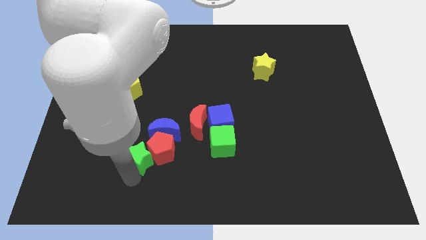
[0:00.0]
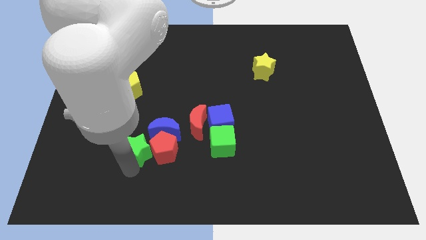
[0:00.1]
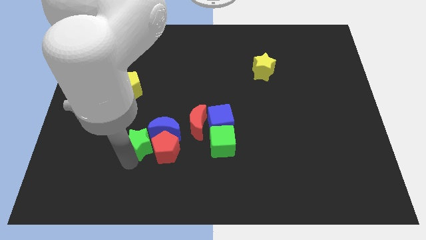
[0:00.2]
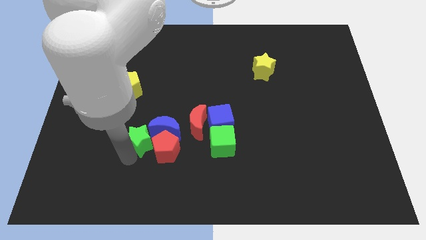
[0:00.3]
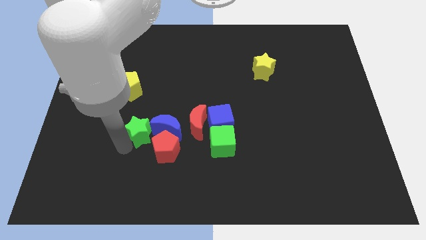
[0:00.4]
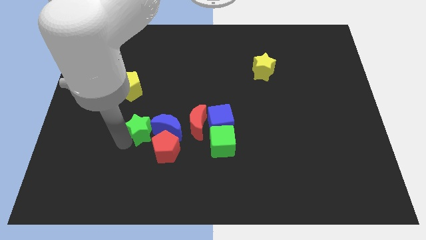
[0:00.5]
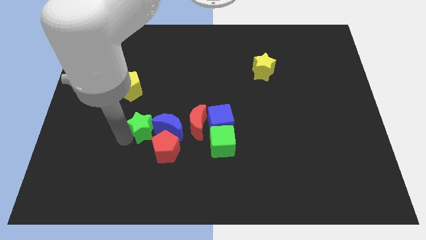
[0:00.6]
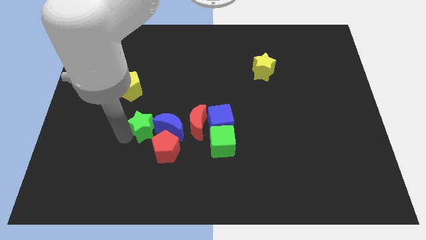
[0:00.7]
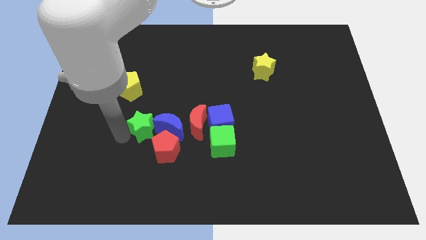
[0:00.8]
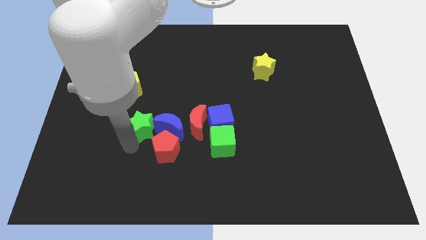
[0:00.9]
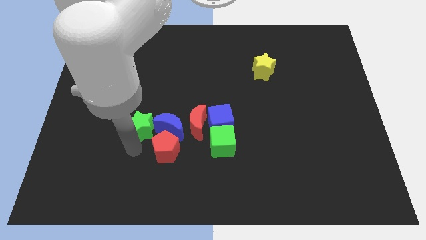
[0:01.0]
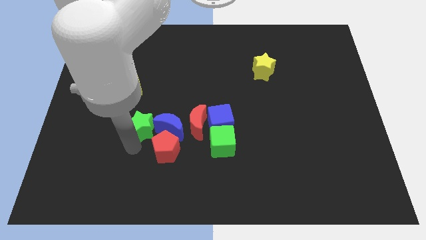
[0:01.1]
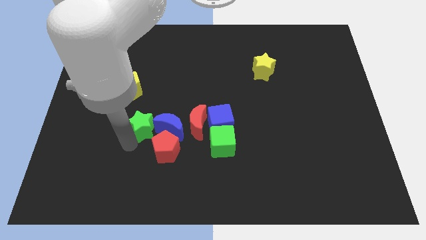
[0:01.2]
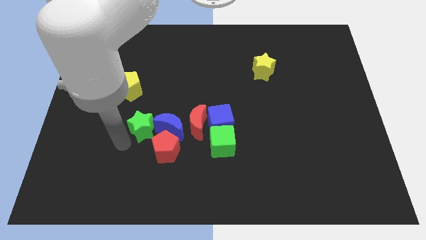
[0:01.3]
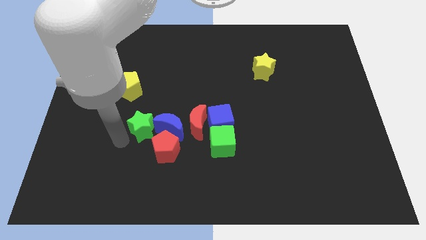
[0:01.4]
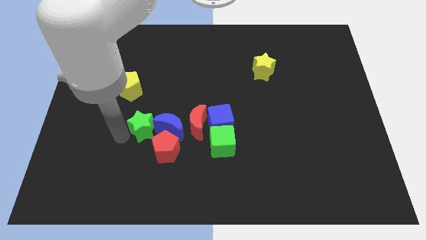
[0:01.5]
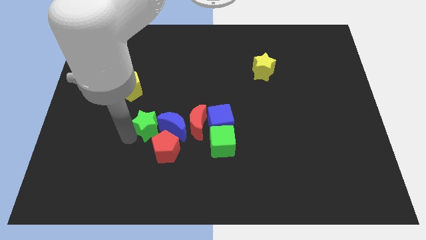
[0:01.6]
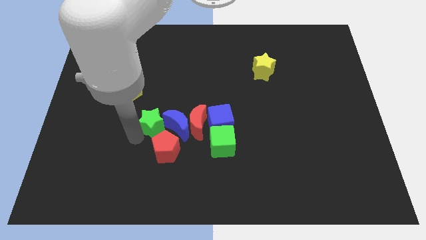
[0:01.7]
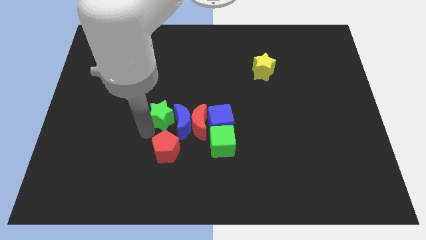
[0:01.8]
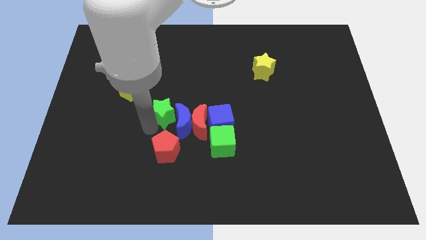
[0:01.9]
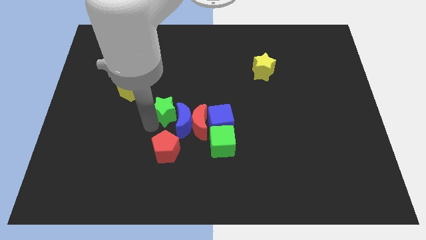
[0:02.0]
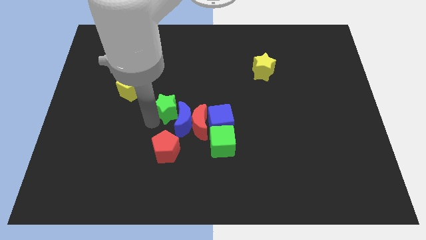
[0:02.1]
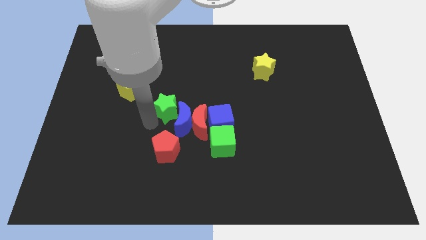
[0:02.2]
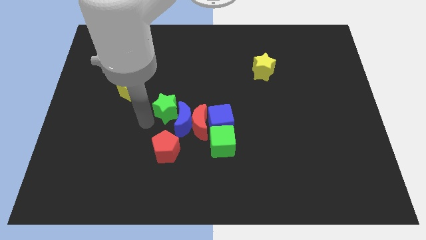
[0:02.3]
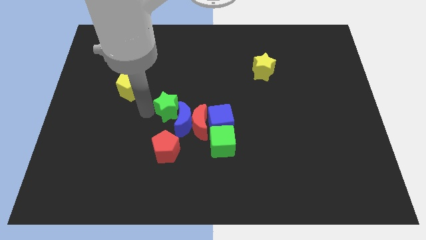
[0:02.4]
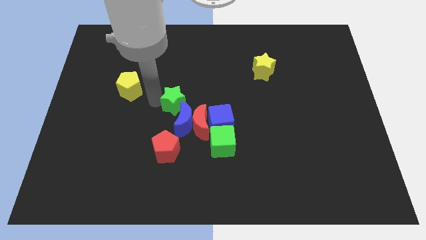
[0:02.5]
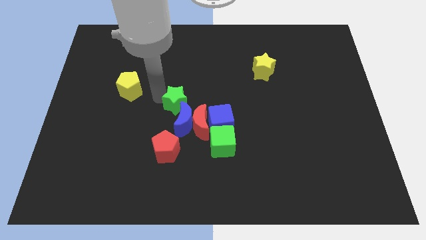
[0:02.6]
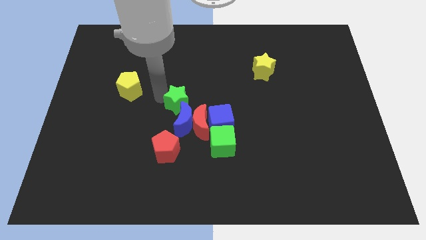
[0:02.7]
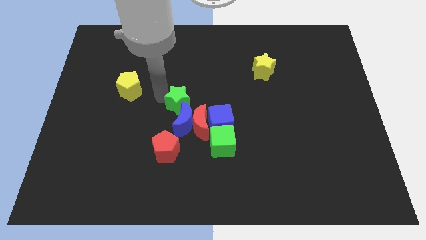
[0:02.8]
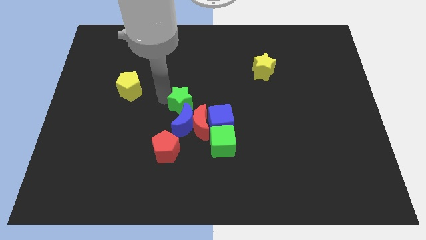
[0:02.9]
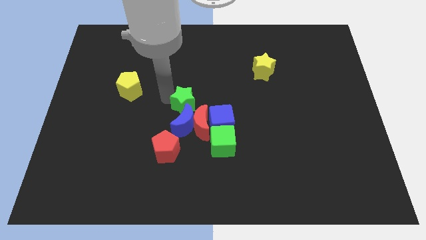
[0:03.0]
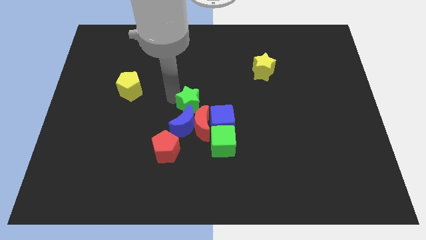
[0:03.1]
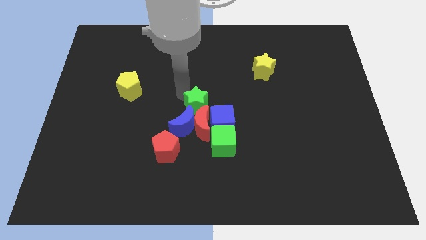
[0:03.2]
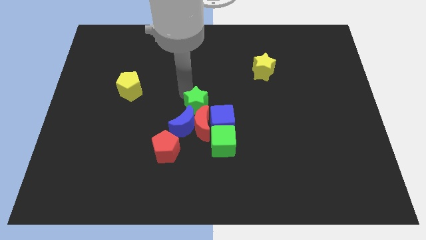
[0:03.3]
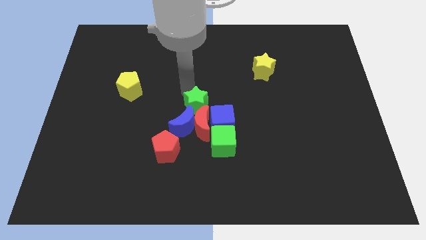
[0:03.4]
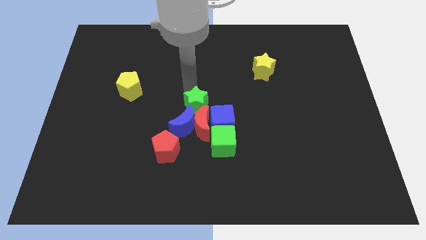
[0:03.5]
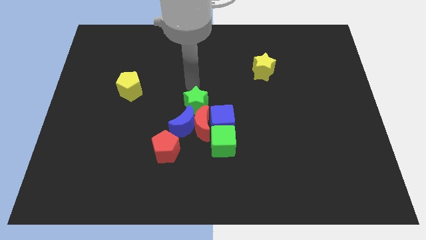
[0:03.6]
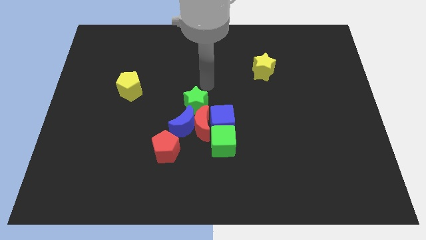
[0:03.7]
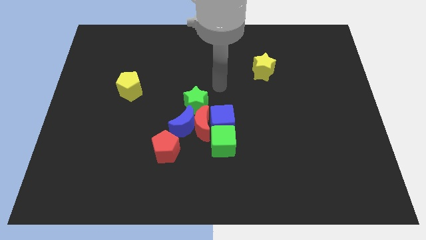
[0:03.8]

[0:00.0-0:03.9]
move the blue crescent and green star diagonally on the top right side of the red pentagon

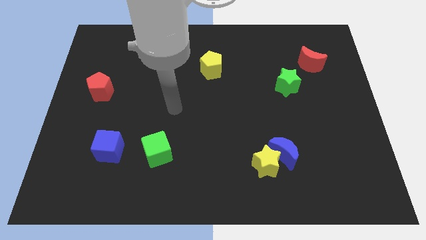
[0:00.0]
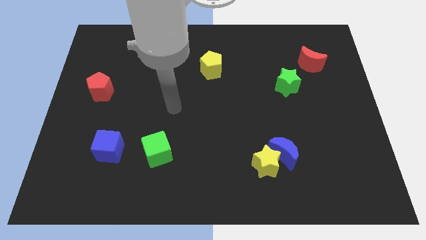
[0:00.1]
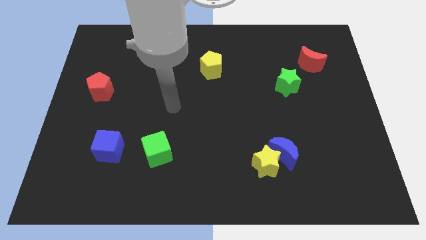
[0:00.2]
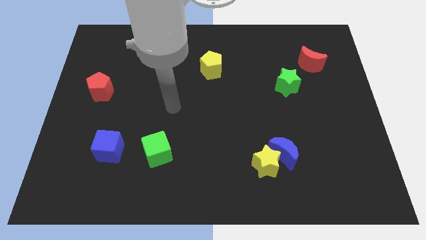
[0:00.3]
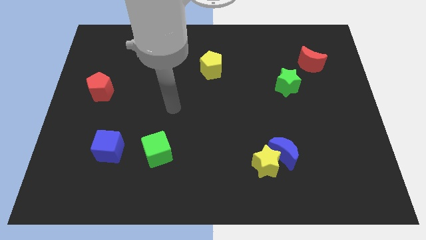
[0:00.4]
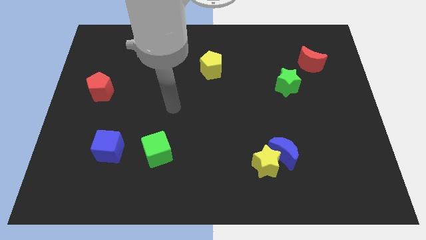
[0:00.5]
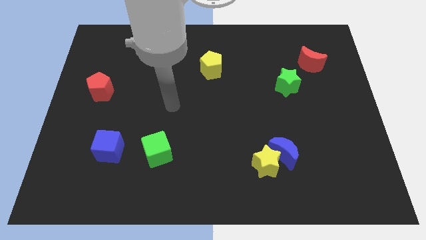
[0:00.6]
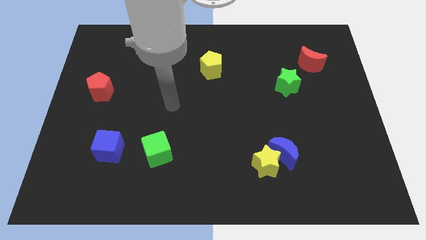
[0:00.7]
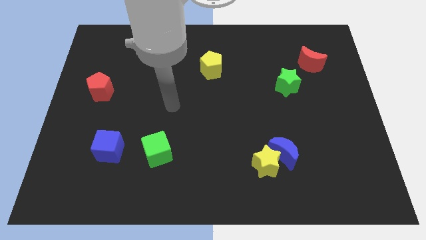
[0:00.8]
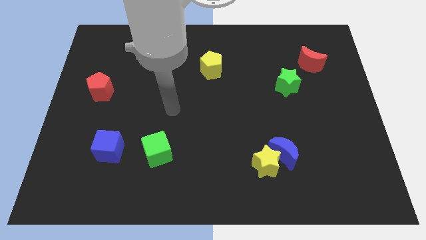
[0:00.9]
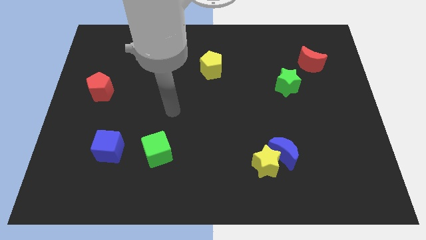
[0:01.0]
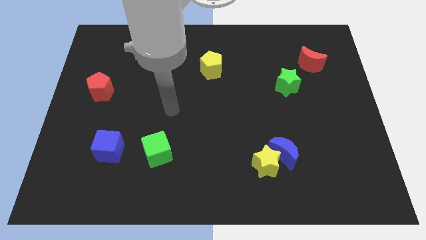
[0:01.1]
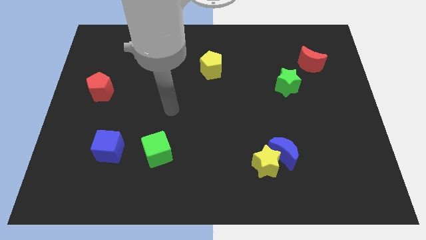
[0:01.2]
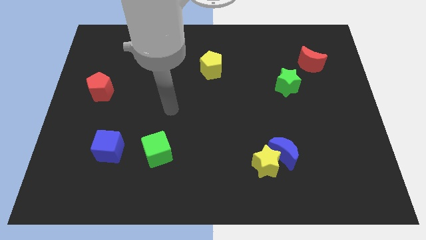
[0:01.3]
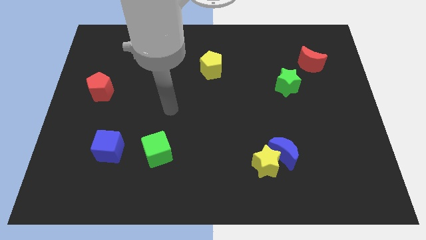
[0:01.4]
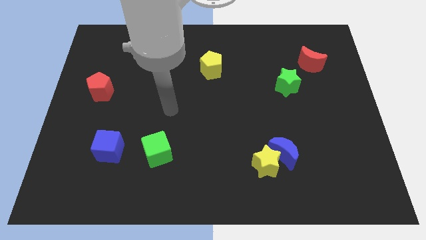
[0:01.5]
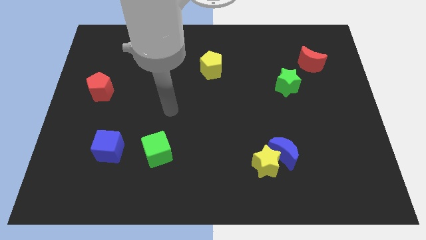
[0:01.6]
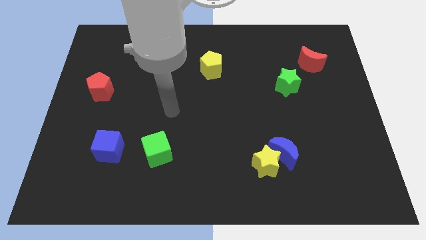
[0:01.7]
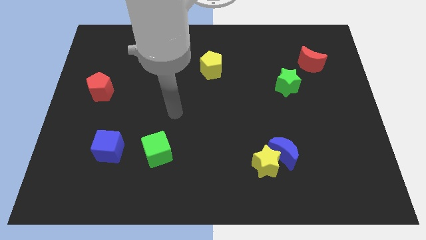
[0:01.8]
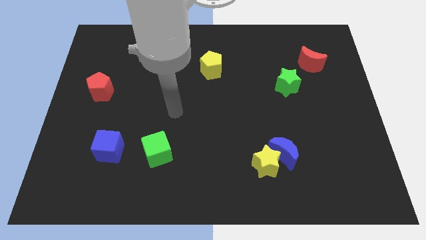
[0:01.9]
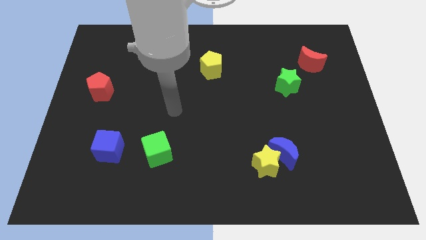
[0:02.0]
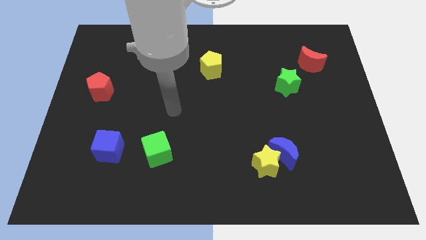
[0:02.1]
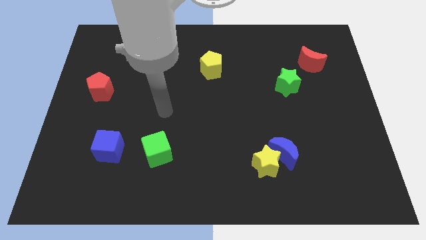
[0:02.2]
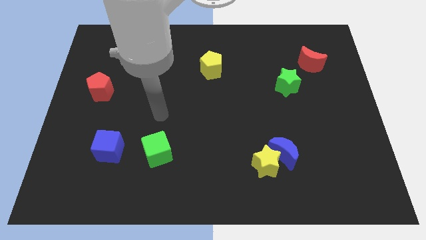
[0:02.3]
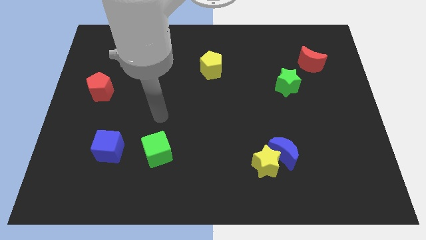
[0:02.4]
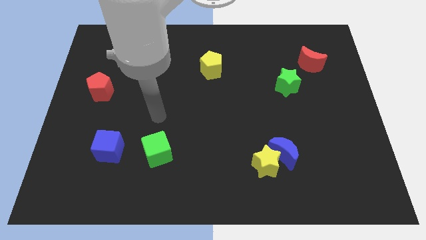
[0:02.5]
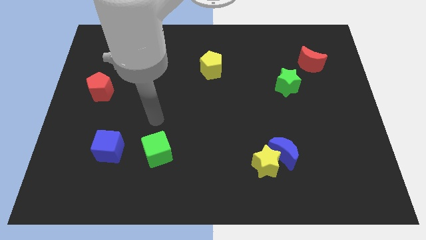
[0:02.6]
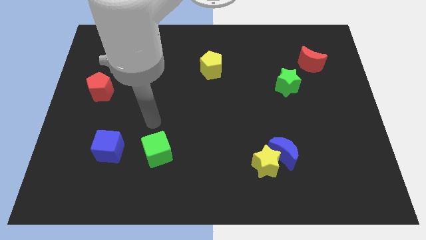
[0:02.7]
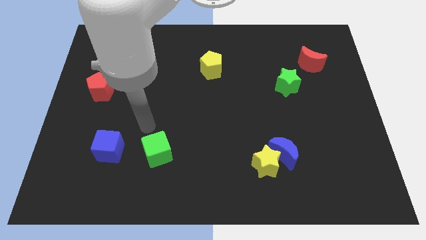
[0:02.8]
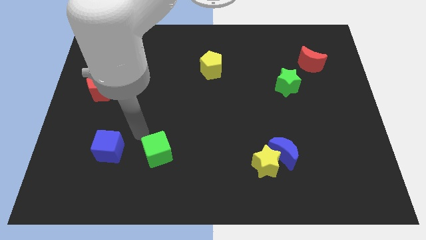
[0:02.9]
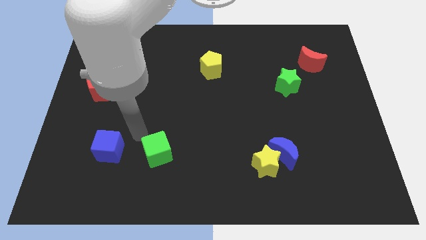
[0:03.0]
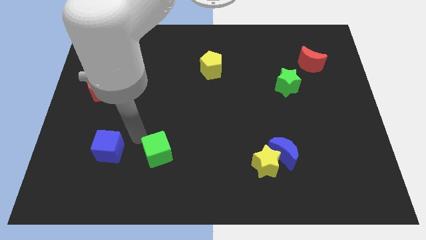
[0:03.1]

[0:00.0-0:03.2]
point your arm above green cube

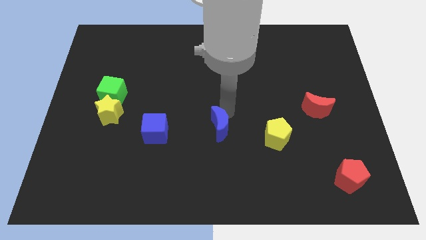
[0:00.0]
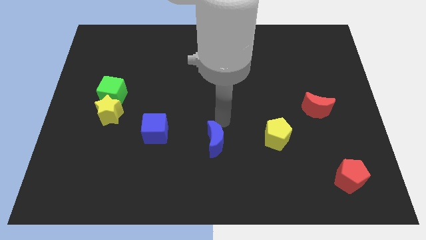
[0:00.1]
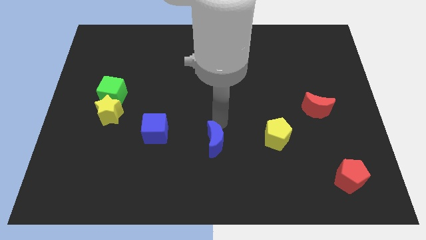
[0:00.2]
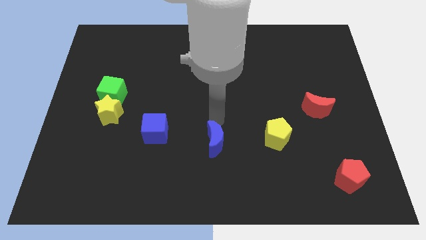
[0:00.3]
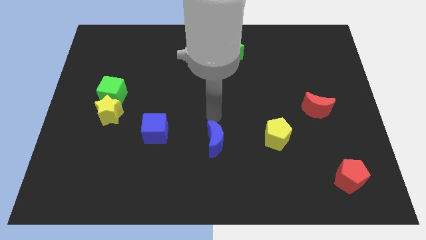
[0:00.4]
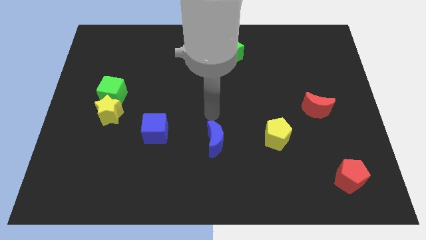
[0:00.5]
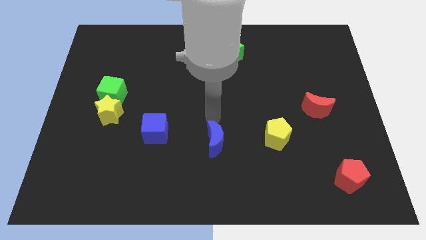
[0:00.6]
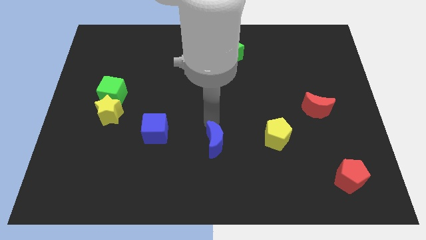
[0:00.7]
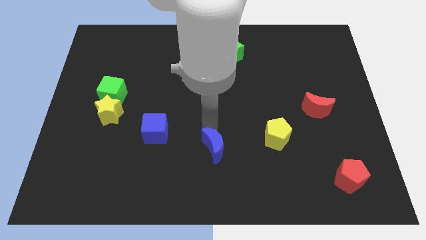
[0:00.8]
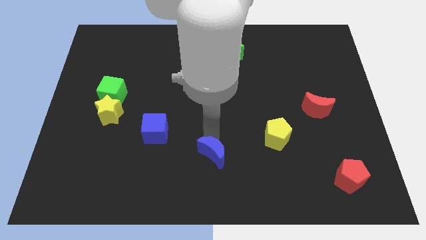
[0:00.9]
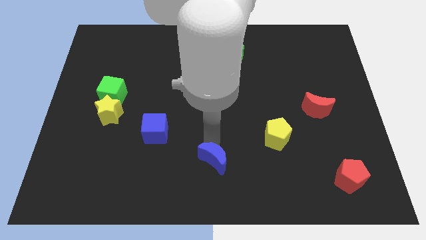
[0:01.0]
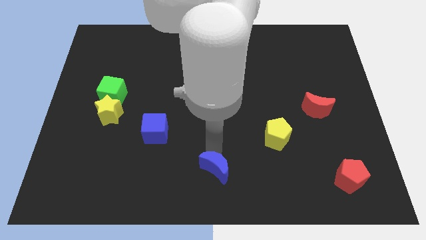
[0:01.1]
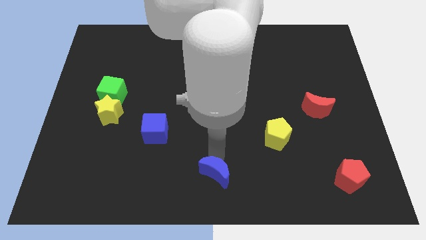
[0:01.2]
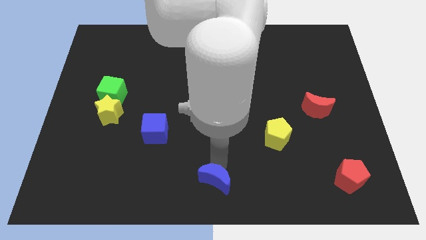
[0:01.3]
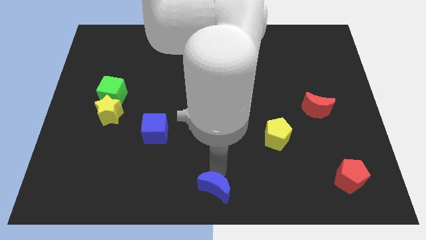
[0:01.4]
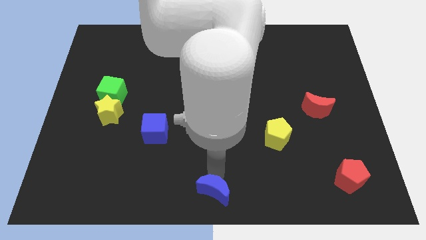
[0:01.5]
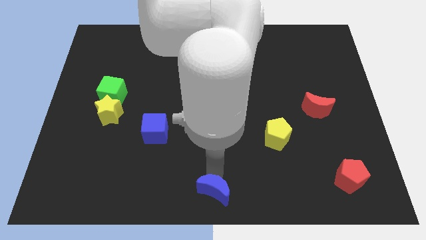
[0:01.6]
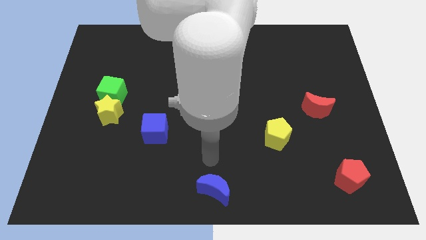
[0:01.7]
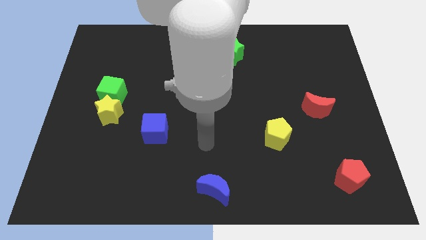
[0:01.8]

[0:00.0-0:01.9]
push the blue moon to the bottom center
